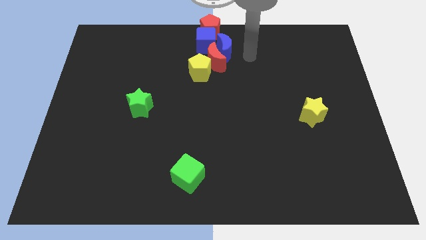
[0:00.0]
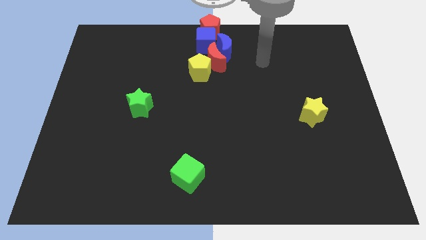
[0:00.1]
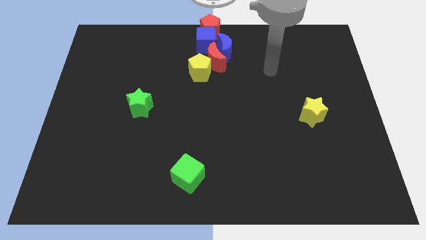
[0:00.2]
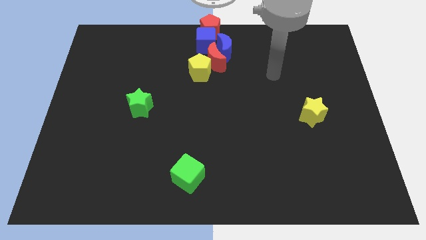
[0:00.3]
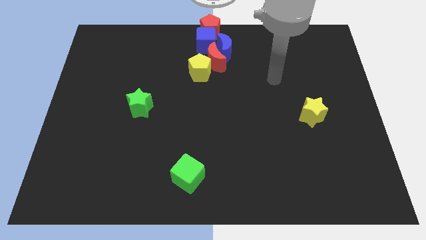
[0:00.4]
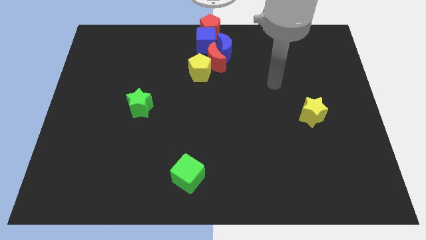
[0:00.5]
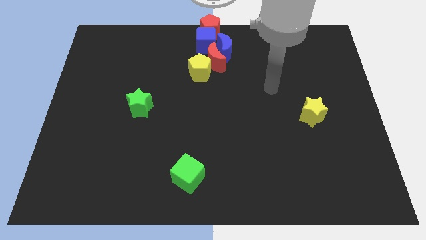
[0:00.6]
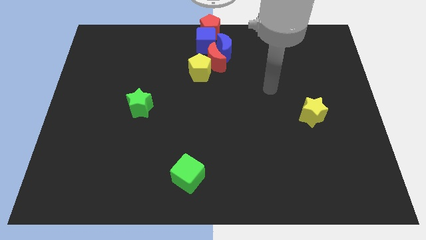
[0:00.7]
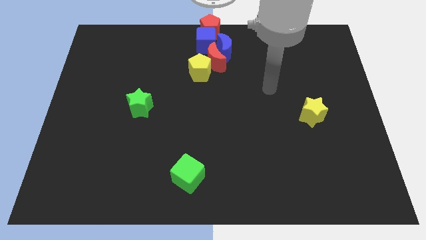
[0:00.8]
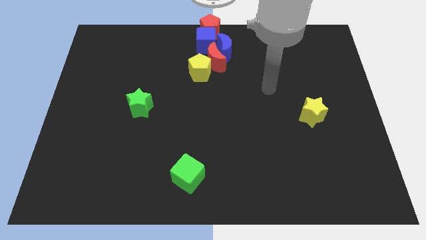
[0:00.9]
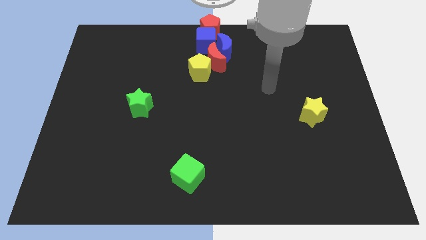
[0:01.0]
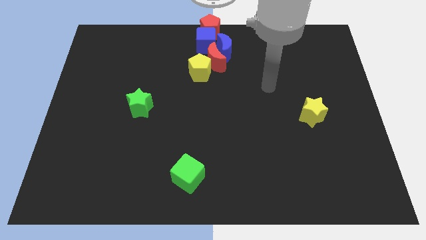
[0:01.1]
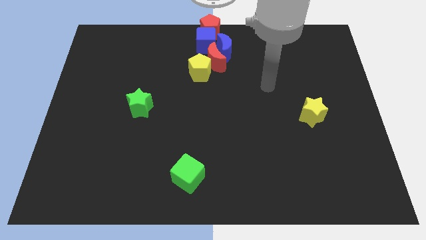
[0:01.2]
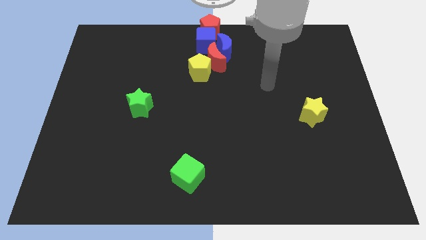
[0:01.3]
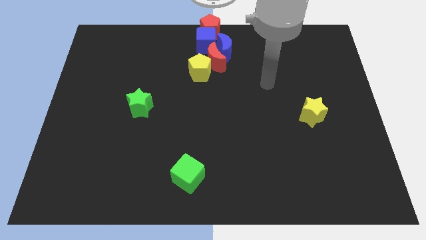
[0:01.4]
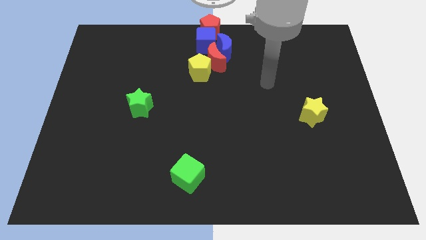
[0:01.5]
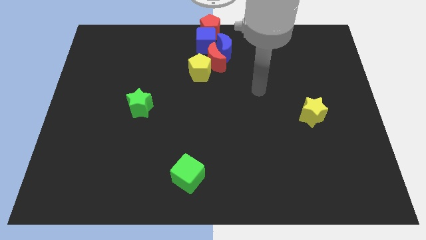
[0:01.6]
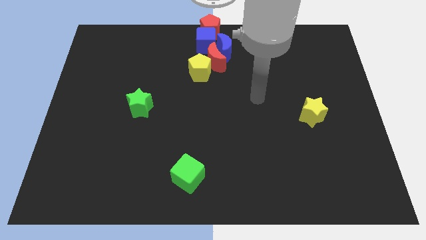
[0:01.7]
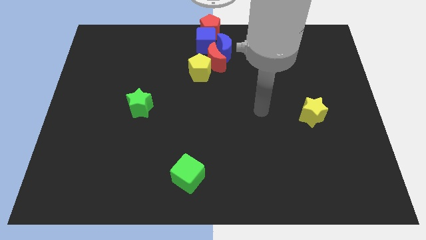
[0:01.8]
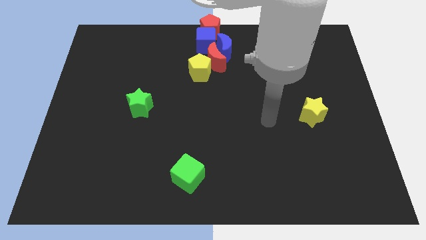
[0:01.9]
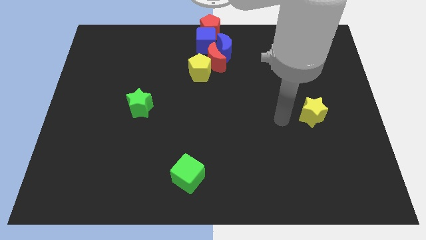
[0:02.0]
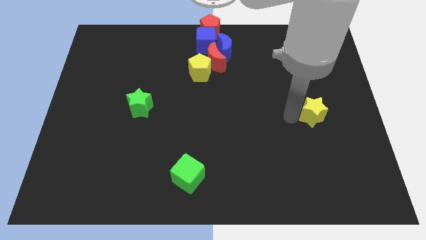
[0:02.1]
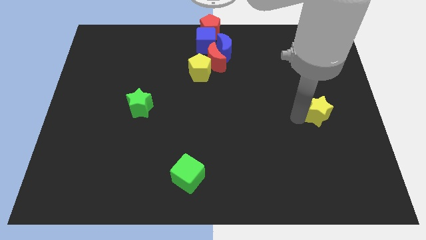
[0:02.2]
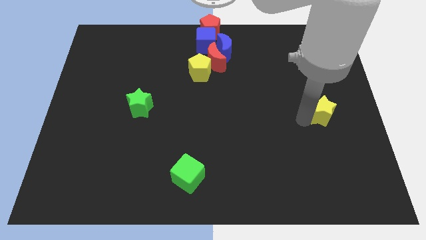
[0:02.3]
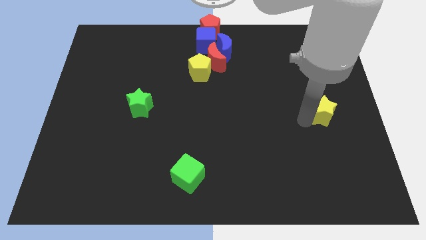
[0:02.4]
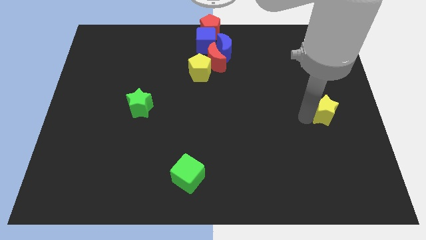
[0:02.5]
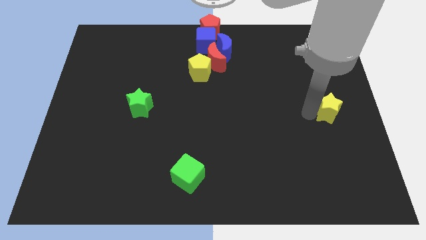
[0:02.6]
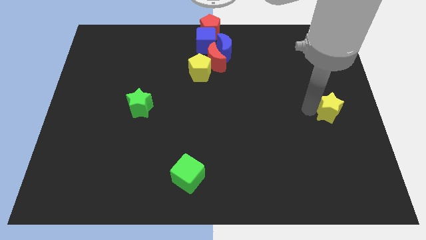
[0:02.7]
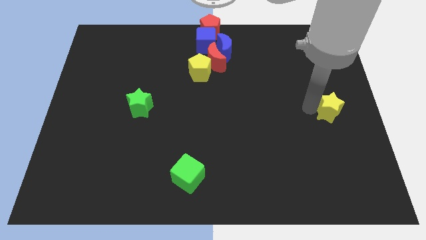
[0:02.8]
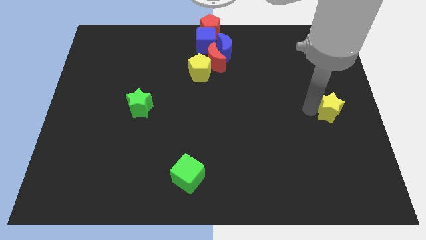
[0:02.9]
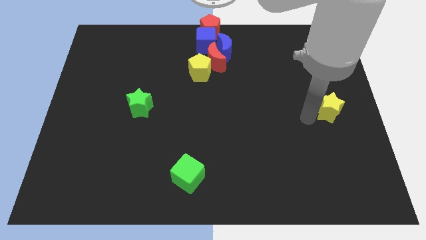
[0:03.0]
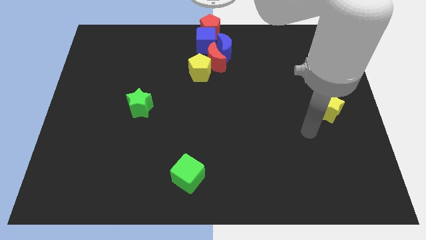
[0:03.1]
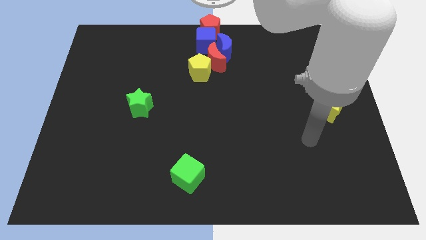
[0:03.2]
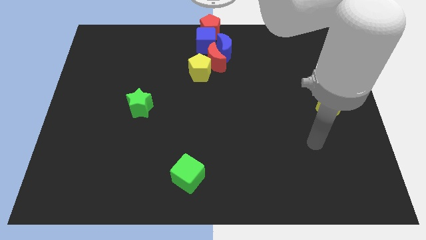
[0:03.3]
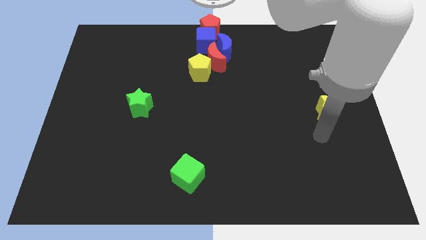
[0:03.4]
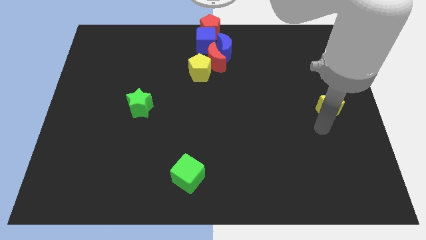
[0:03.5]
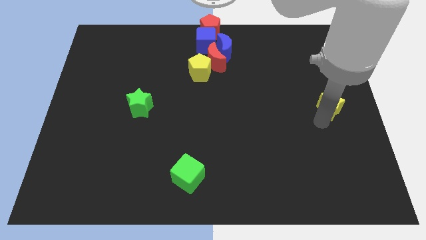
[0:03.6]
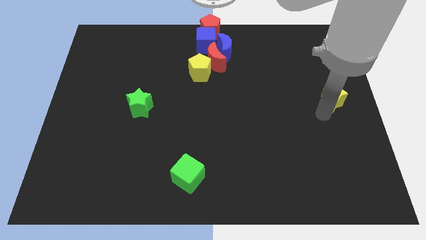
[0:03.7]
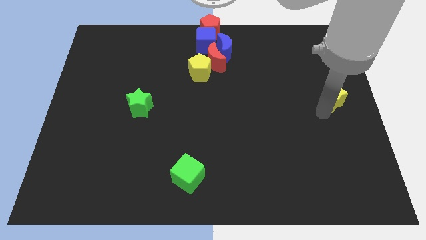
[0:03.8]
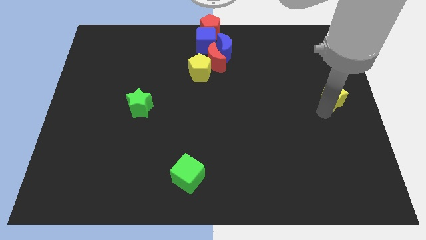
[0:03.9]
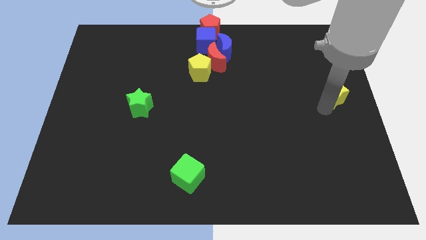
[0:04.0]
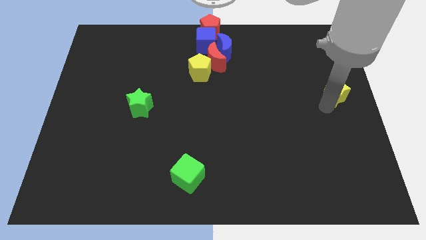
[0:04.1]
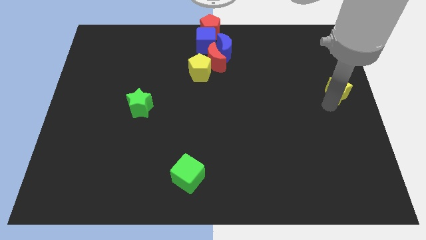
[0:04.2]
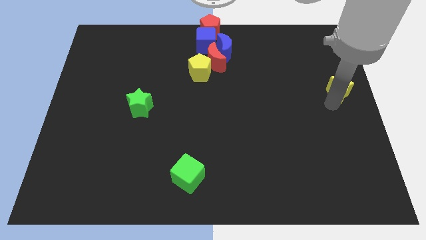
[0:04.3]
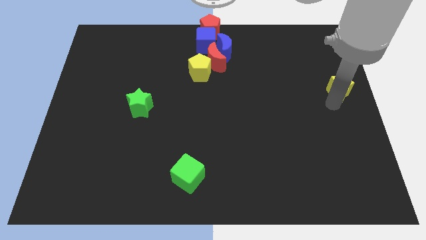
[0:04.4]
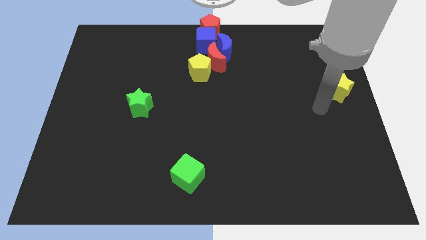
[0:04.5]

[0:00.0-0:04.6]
push the yellow star to the right center of the board

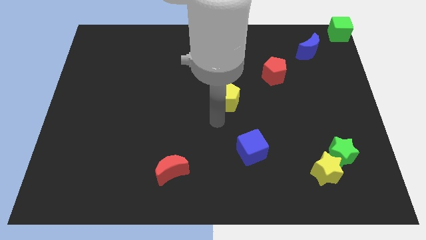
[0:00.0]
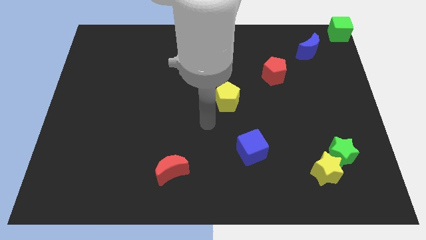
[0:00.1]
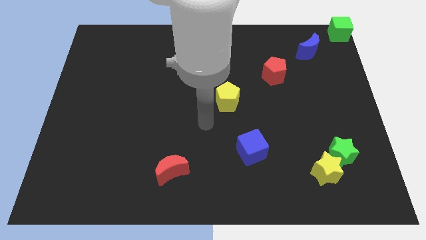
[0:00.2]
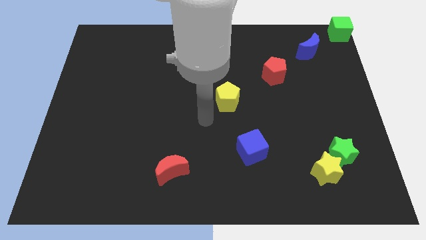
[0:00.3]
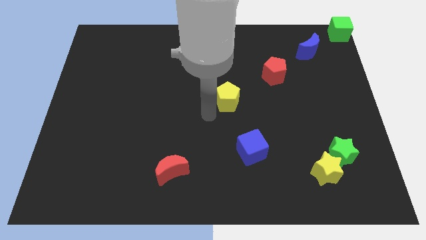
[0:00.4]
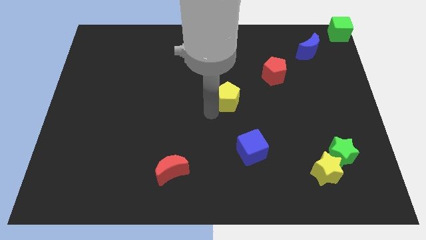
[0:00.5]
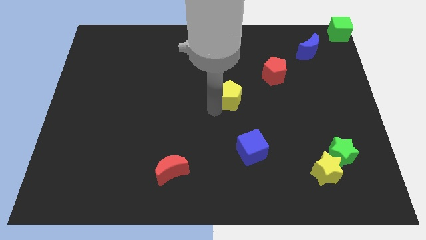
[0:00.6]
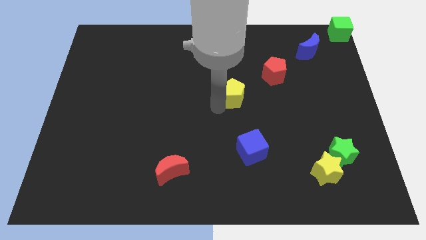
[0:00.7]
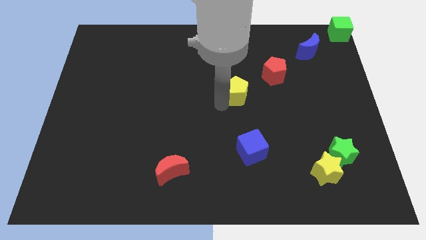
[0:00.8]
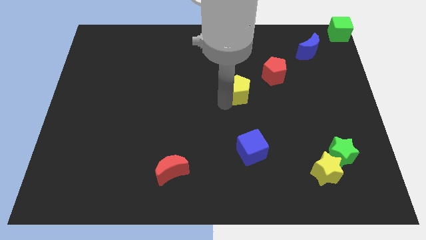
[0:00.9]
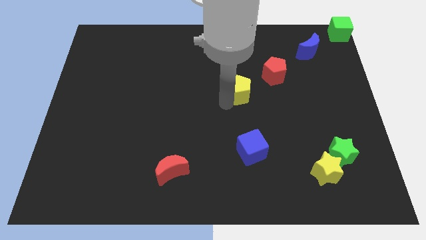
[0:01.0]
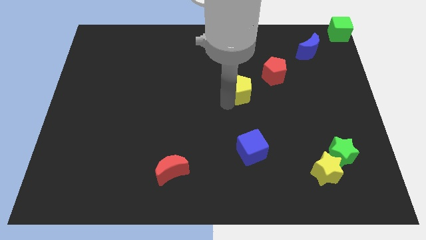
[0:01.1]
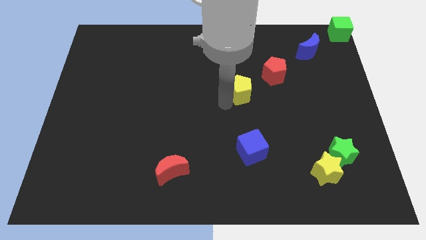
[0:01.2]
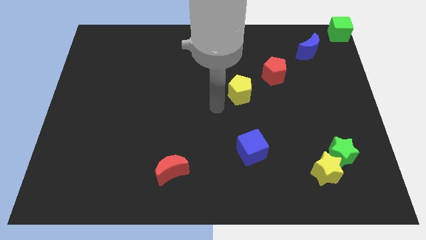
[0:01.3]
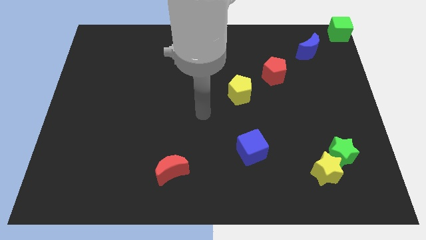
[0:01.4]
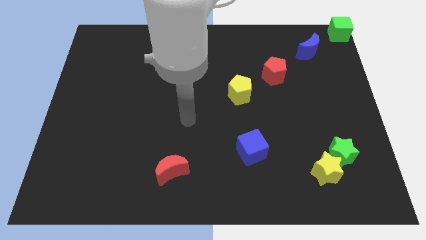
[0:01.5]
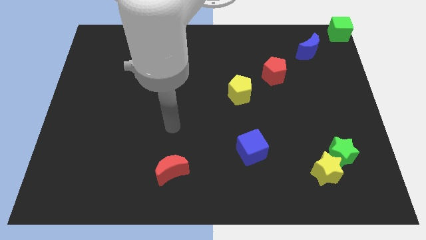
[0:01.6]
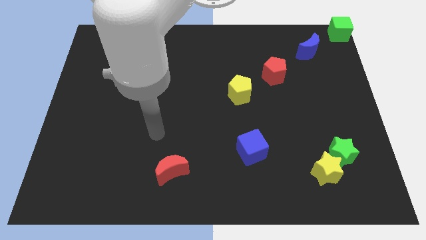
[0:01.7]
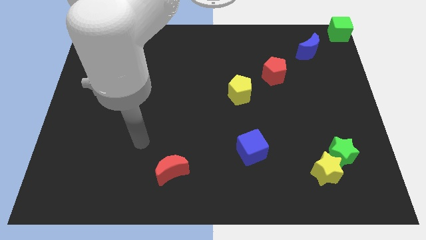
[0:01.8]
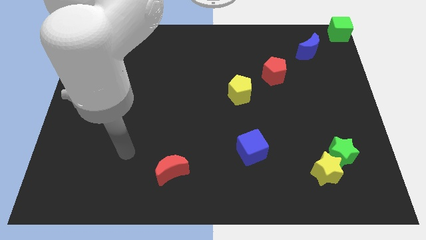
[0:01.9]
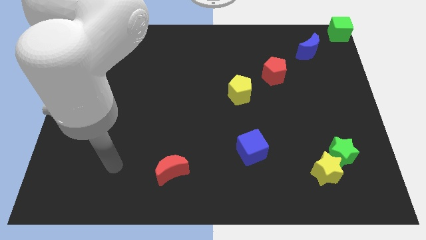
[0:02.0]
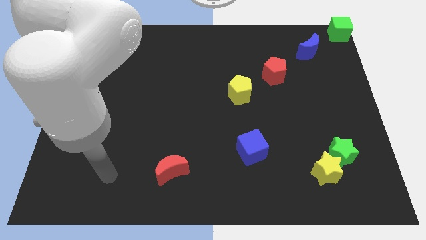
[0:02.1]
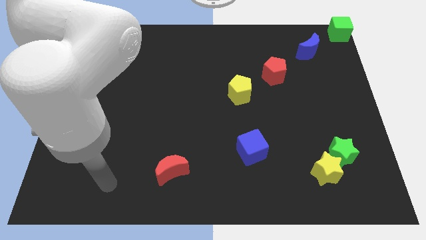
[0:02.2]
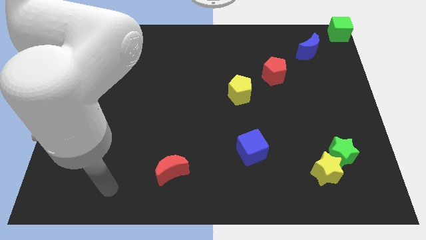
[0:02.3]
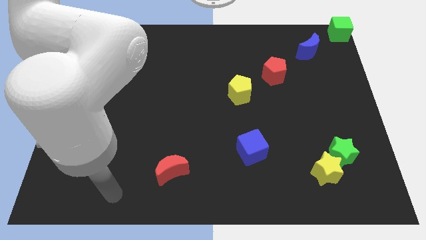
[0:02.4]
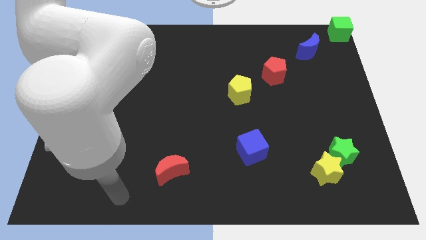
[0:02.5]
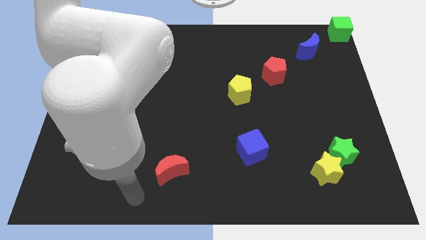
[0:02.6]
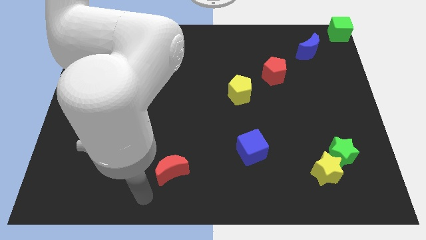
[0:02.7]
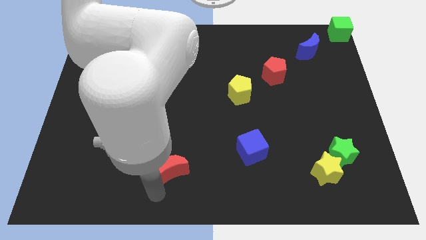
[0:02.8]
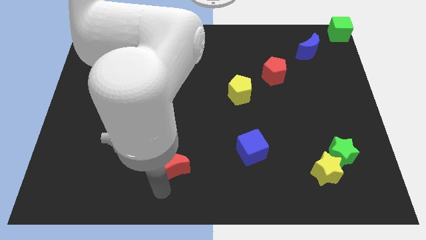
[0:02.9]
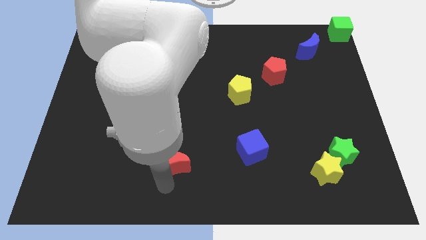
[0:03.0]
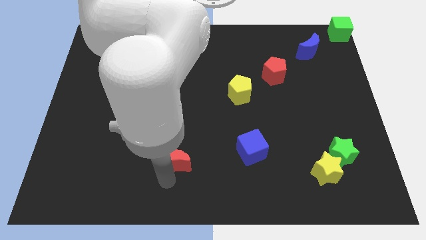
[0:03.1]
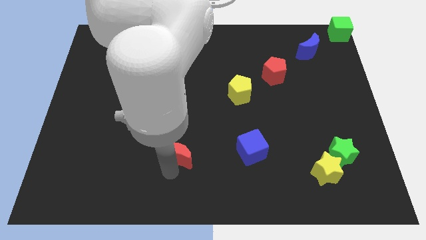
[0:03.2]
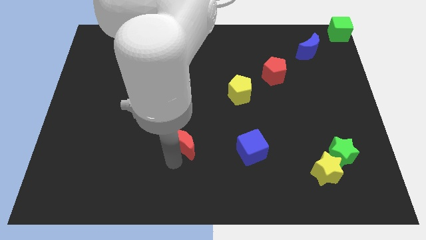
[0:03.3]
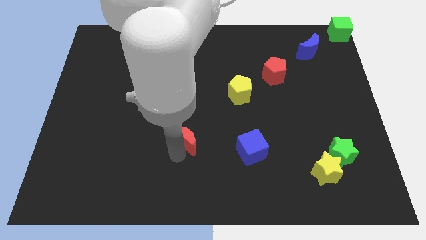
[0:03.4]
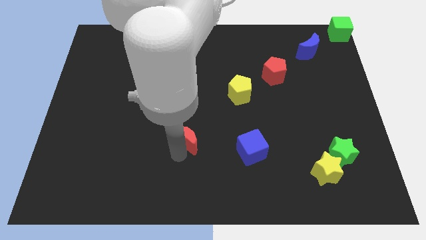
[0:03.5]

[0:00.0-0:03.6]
place the red moon to the left of the blue cube

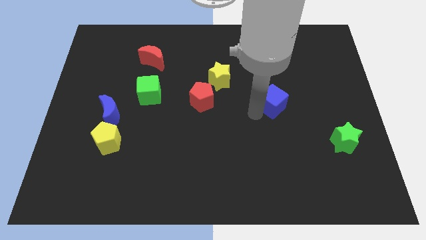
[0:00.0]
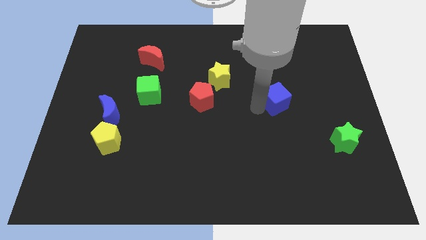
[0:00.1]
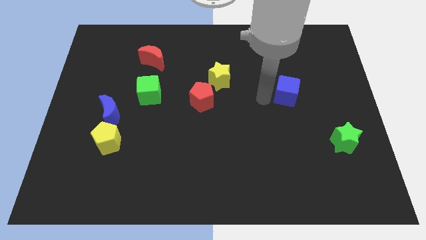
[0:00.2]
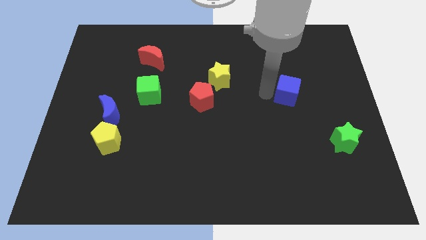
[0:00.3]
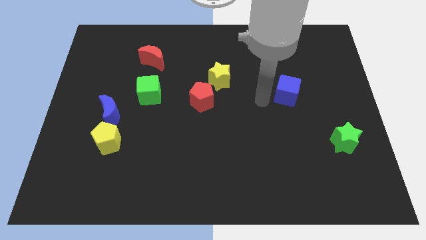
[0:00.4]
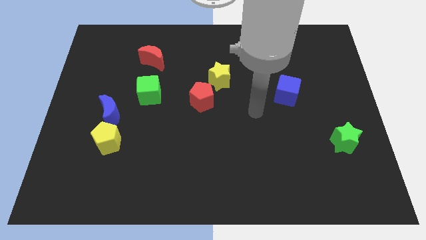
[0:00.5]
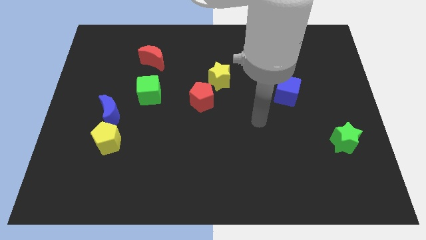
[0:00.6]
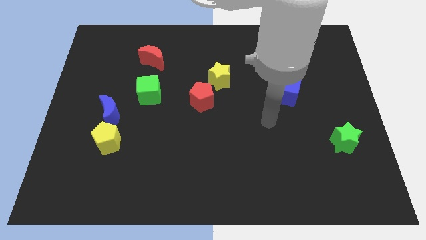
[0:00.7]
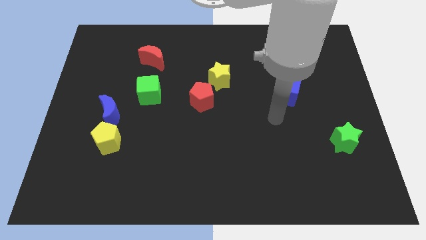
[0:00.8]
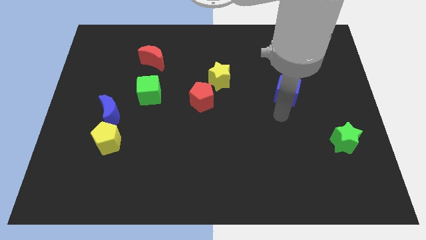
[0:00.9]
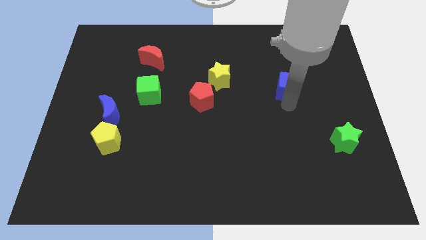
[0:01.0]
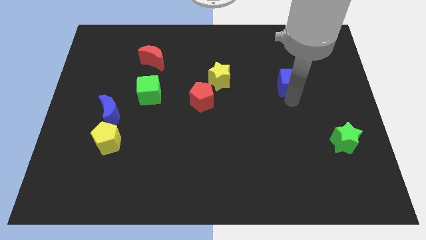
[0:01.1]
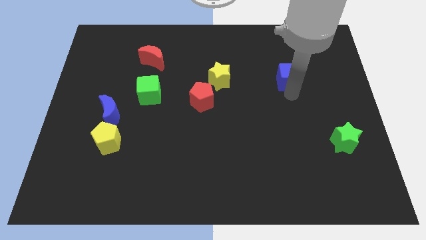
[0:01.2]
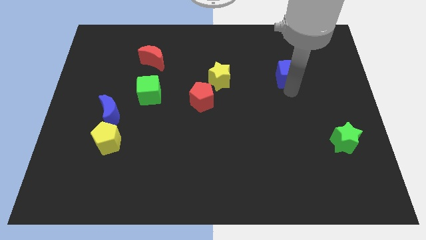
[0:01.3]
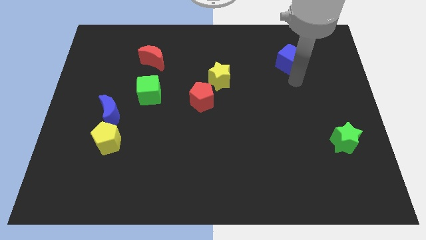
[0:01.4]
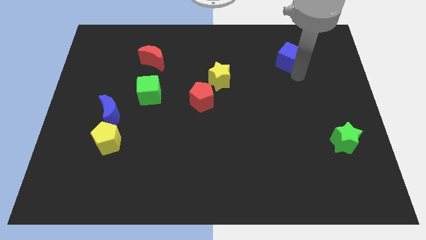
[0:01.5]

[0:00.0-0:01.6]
place the blue cube horizontally to the right side of the red crescent
